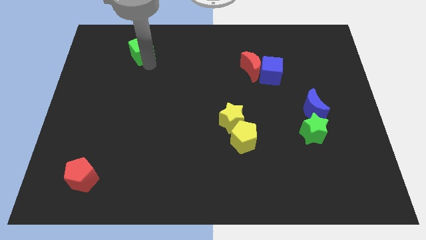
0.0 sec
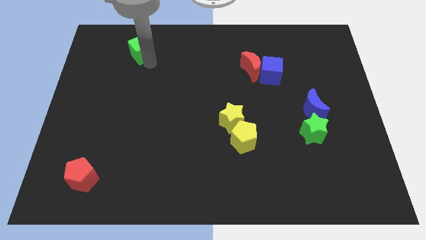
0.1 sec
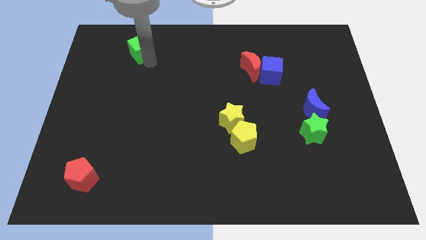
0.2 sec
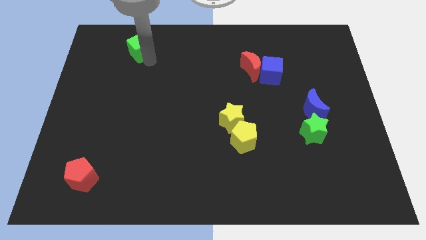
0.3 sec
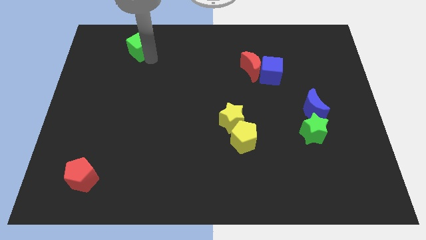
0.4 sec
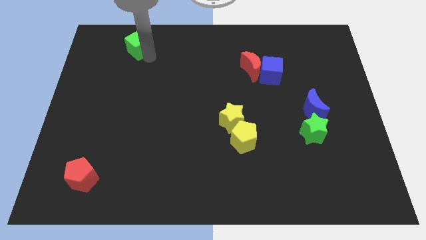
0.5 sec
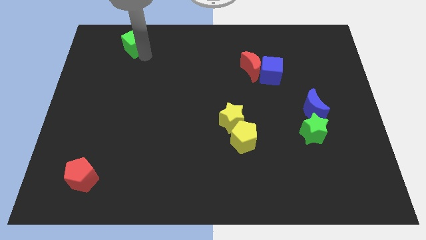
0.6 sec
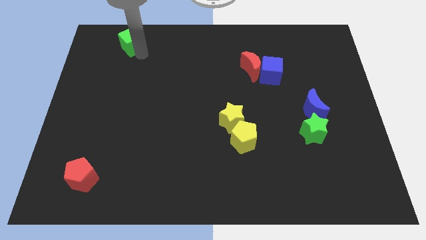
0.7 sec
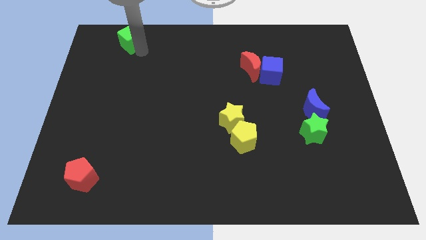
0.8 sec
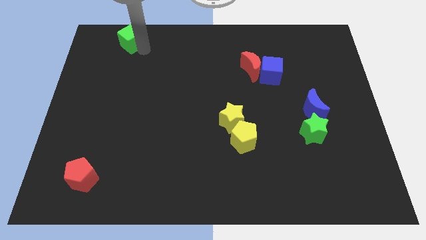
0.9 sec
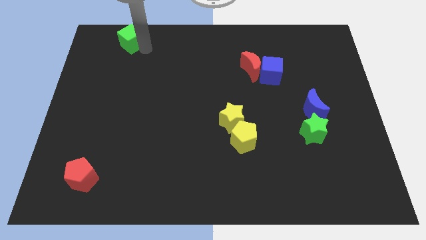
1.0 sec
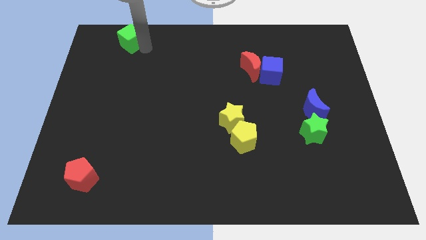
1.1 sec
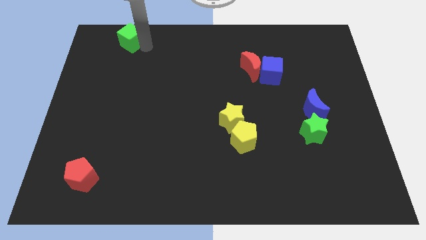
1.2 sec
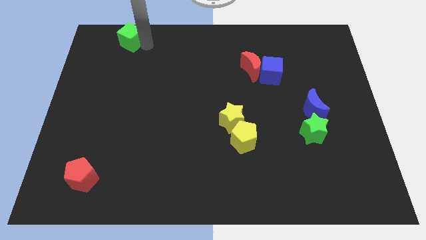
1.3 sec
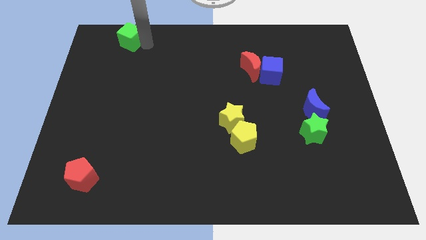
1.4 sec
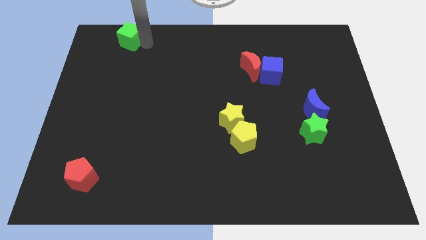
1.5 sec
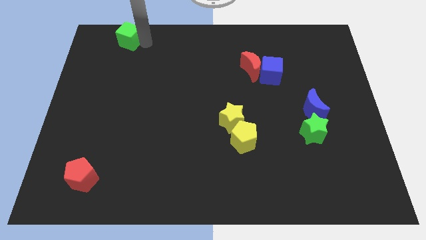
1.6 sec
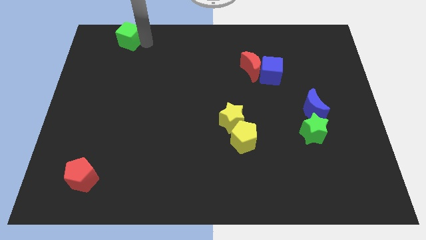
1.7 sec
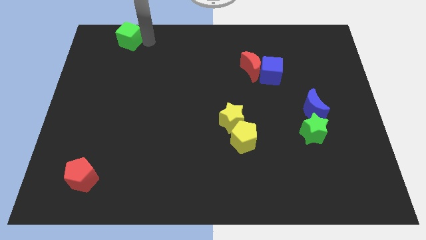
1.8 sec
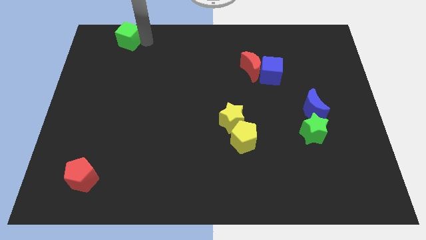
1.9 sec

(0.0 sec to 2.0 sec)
move green cube towards top left

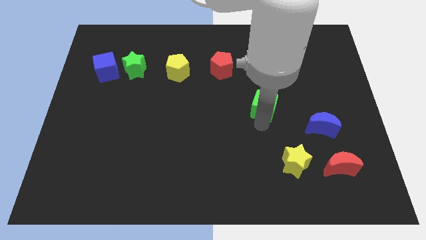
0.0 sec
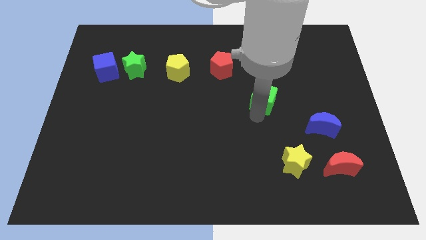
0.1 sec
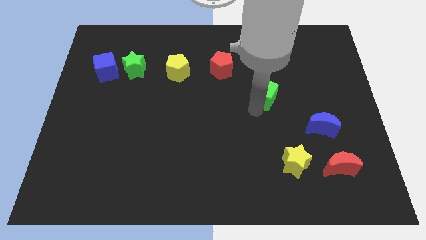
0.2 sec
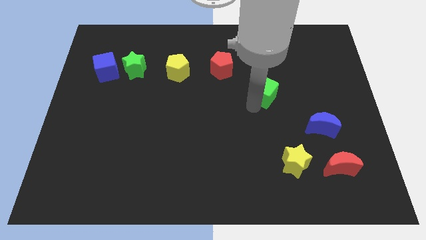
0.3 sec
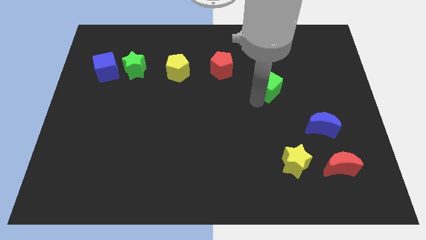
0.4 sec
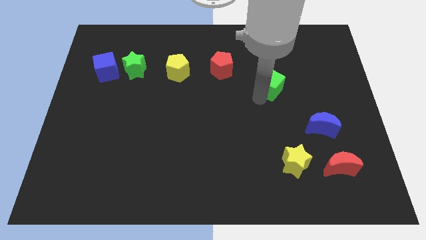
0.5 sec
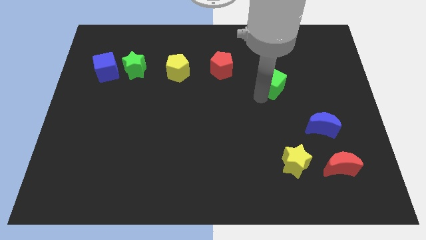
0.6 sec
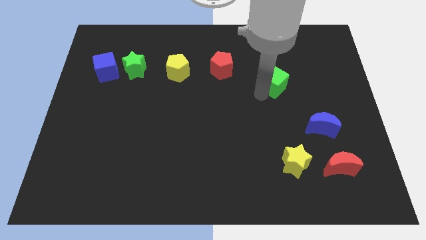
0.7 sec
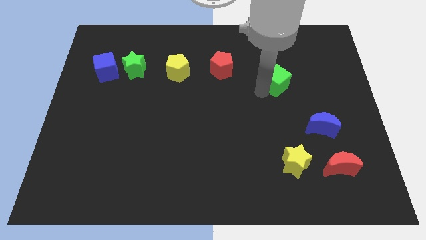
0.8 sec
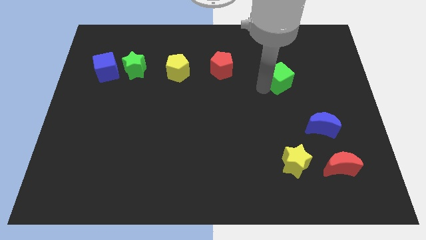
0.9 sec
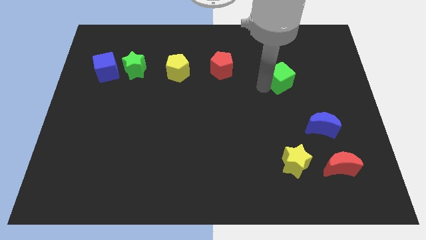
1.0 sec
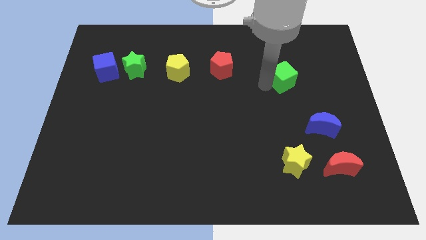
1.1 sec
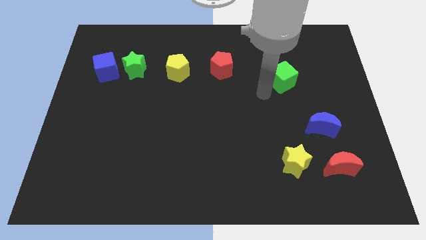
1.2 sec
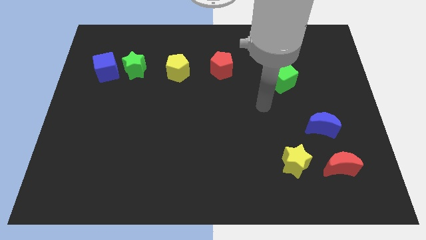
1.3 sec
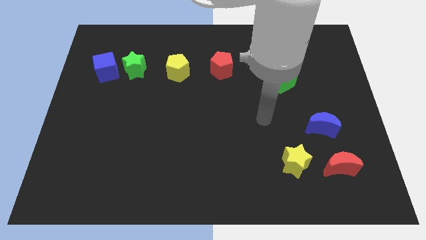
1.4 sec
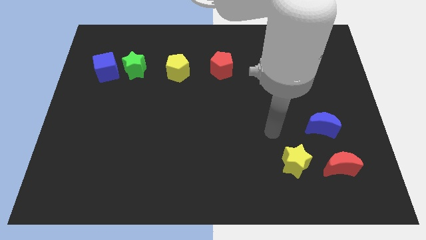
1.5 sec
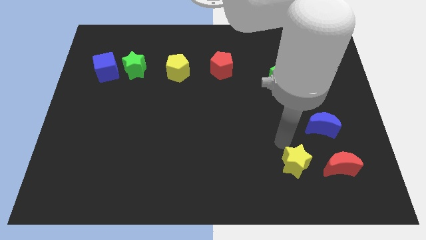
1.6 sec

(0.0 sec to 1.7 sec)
move the green cube towards top of the board

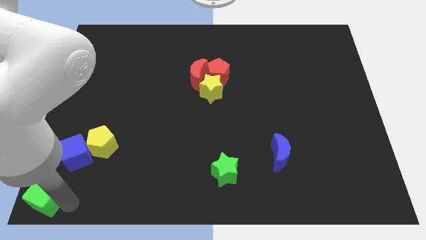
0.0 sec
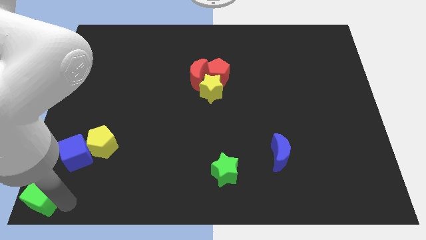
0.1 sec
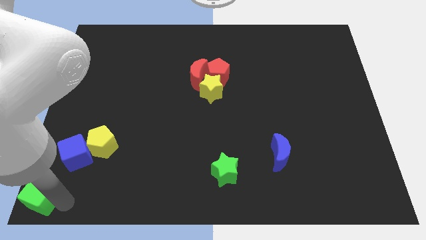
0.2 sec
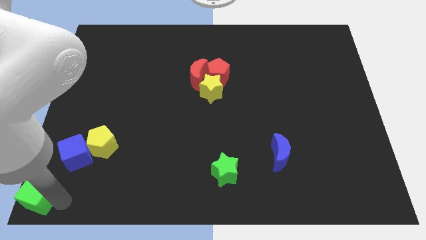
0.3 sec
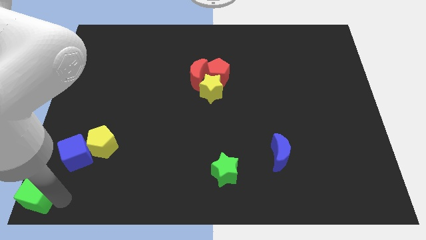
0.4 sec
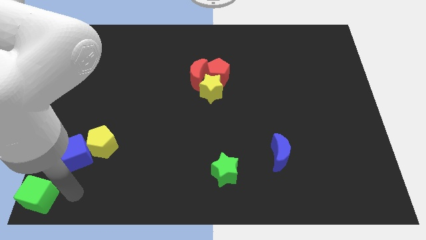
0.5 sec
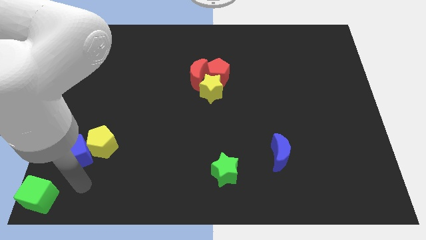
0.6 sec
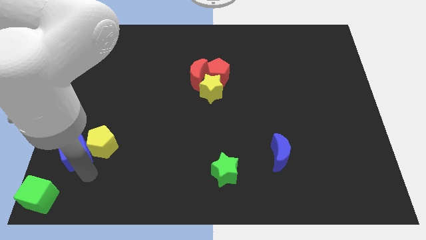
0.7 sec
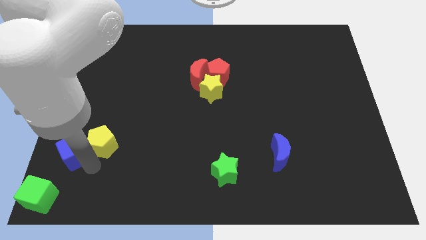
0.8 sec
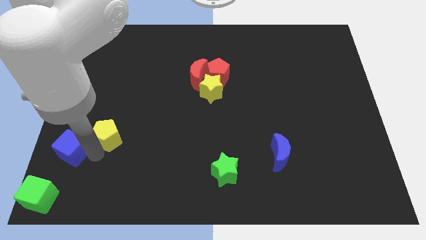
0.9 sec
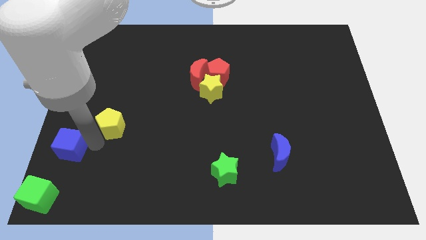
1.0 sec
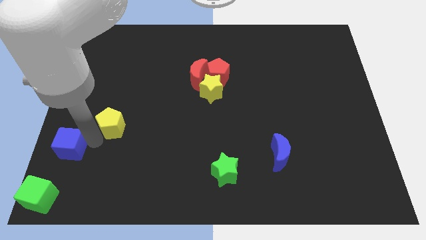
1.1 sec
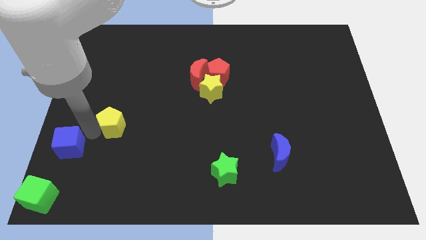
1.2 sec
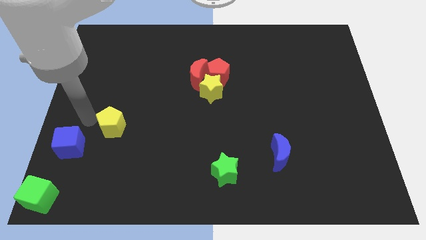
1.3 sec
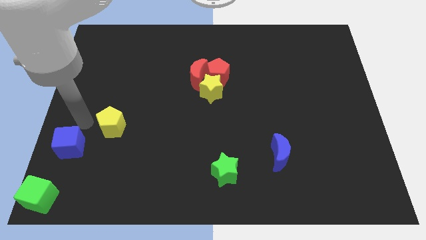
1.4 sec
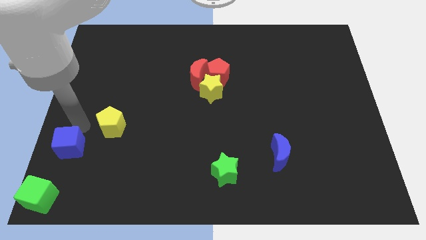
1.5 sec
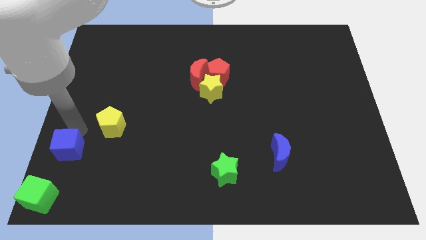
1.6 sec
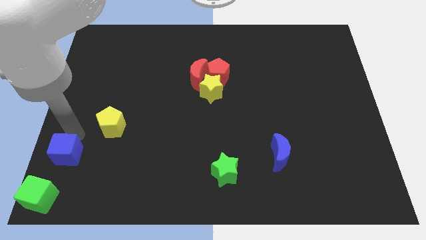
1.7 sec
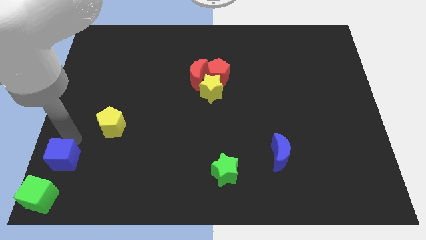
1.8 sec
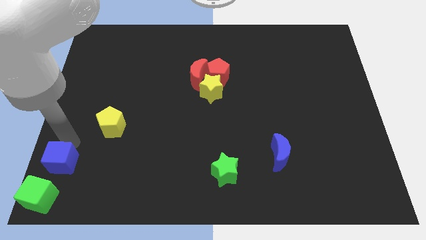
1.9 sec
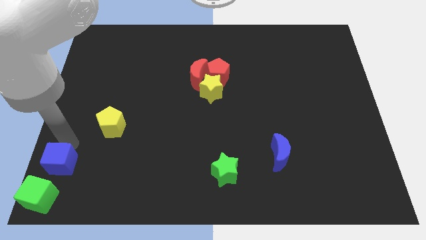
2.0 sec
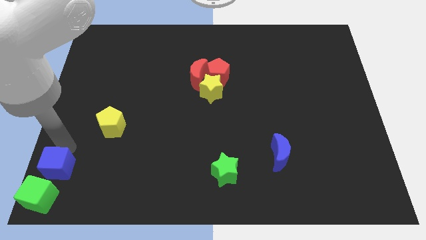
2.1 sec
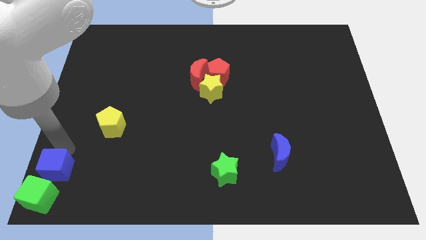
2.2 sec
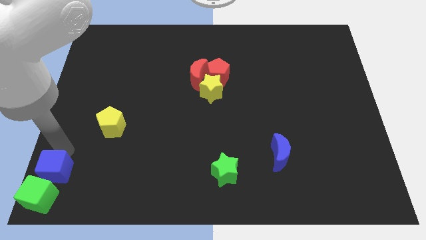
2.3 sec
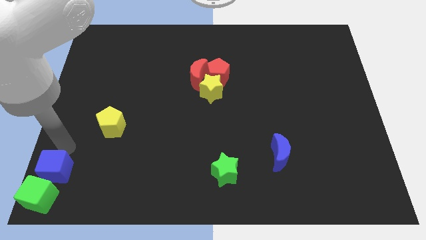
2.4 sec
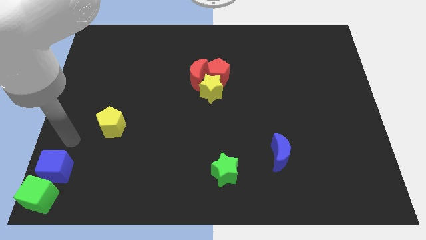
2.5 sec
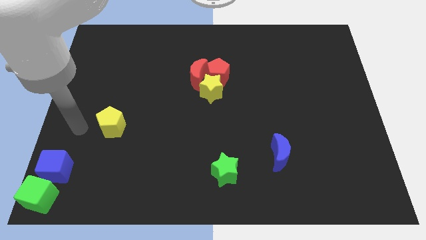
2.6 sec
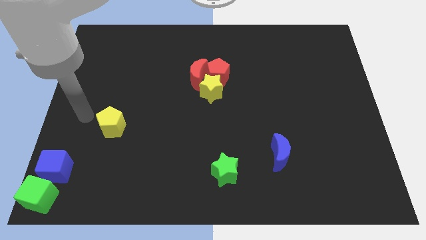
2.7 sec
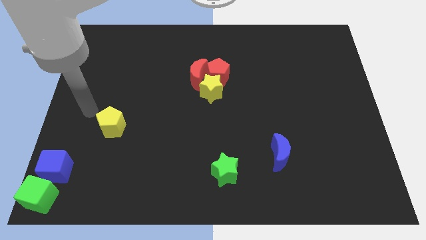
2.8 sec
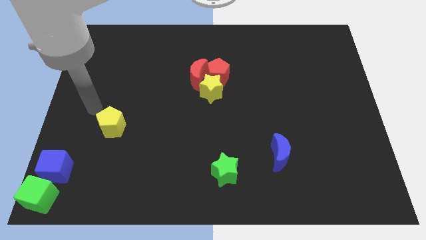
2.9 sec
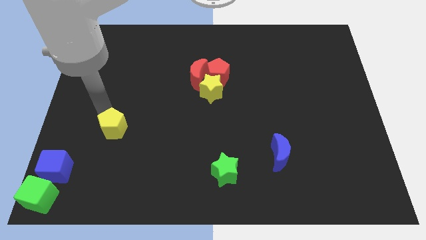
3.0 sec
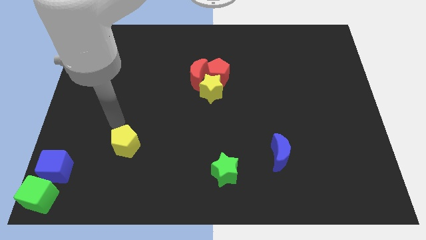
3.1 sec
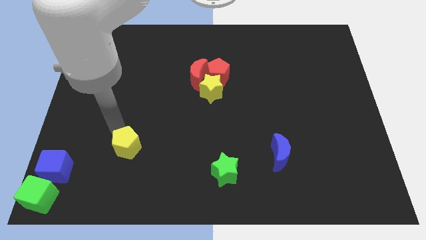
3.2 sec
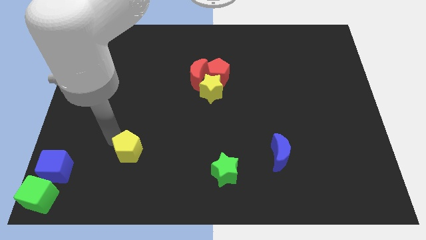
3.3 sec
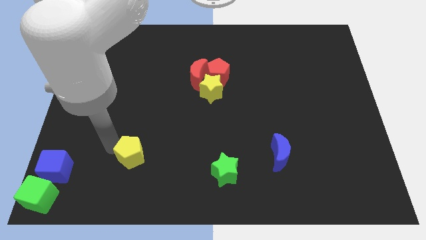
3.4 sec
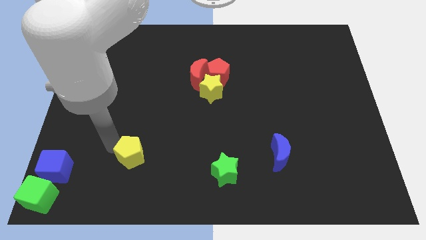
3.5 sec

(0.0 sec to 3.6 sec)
push the yellow pentagon to the right side of the blue cube

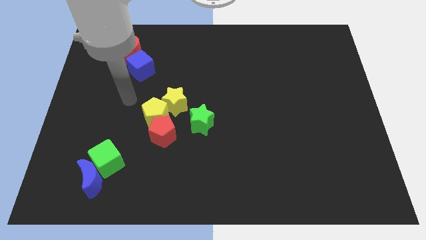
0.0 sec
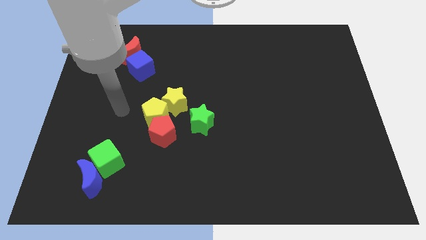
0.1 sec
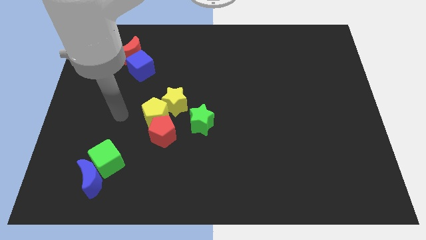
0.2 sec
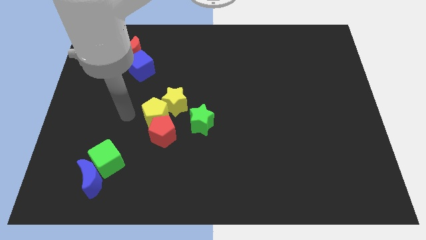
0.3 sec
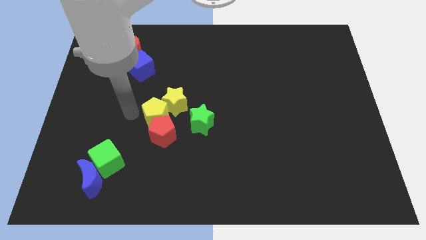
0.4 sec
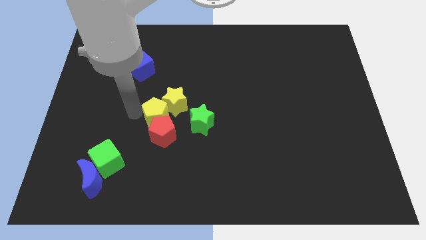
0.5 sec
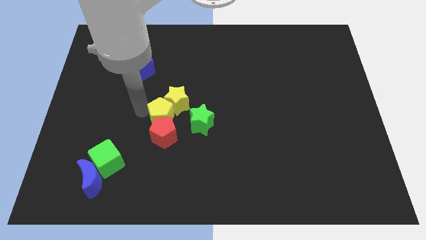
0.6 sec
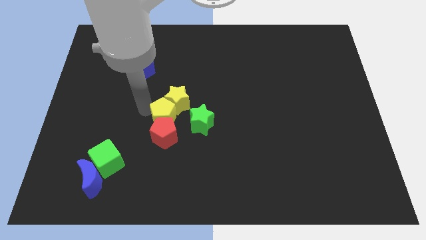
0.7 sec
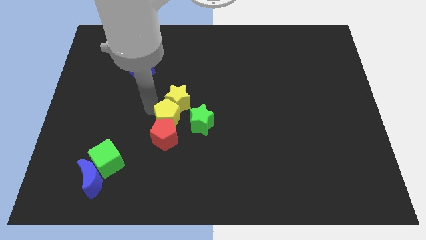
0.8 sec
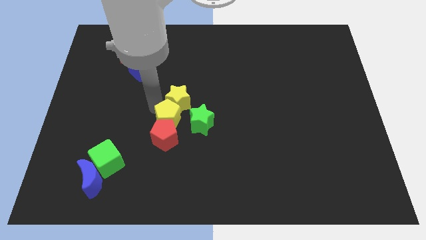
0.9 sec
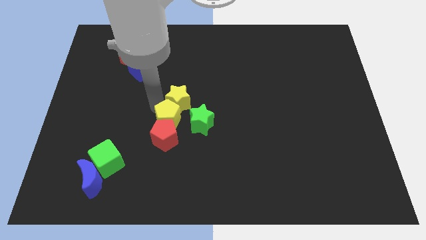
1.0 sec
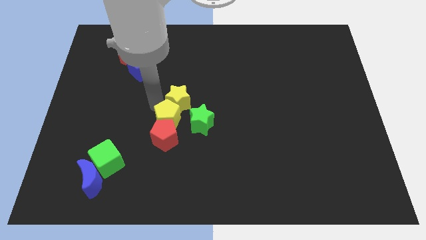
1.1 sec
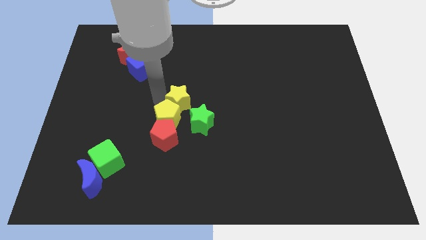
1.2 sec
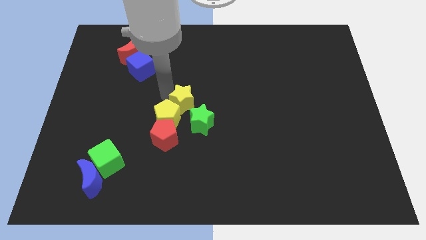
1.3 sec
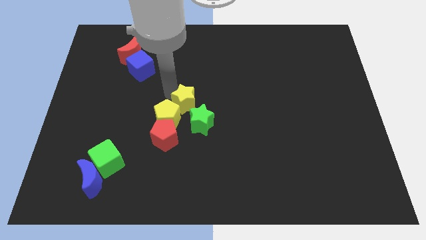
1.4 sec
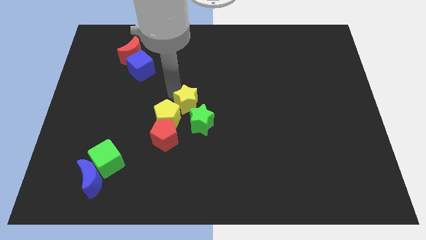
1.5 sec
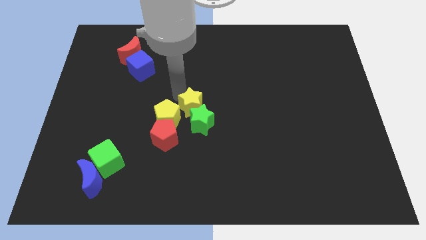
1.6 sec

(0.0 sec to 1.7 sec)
push the red pentagon and yellow star with yellow pentagon towards the center of the board
